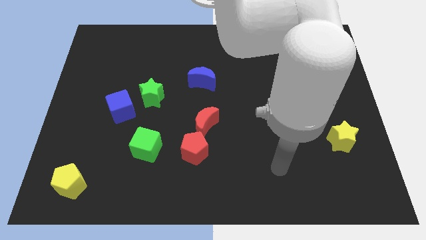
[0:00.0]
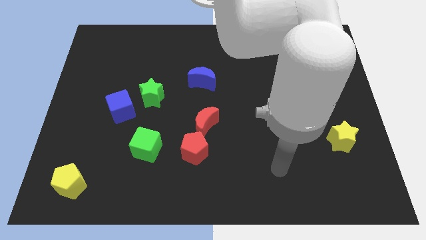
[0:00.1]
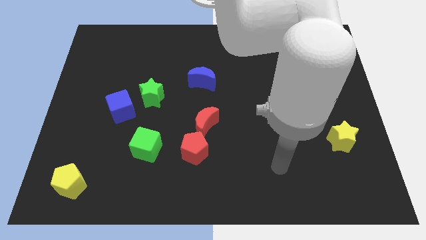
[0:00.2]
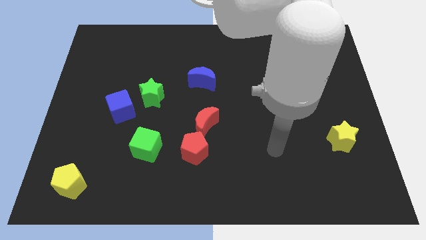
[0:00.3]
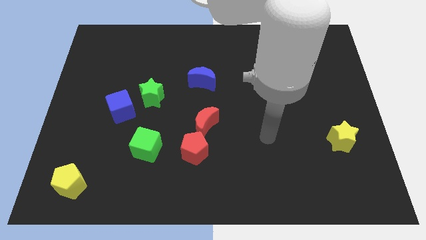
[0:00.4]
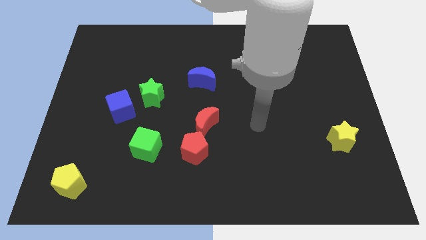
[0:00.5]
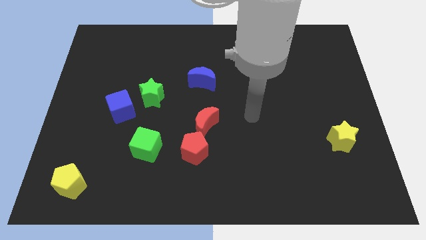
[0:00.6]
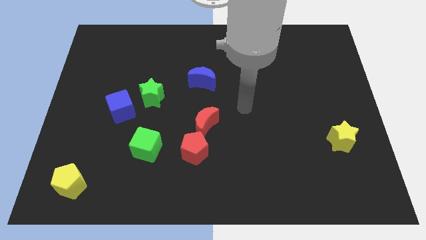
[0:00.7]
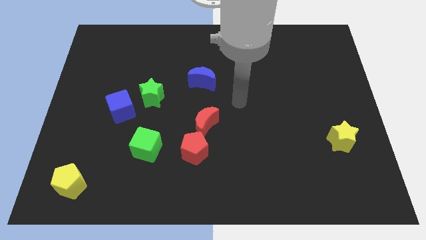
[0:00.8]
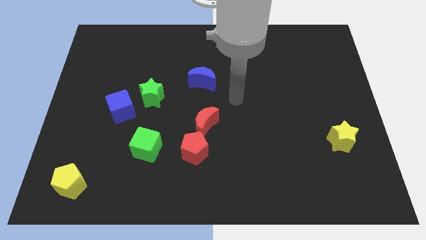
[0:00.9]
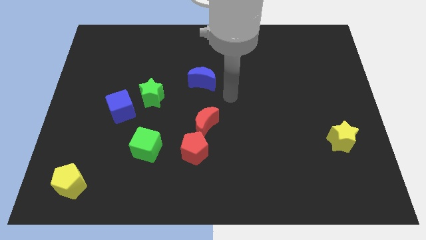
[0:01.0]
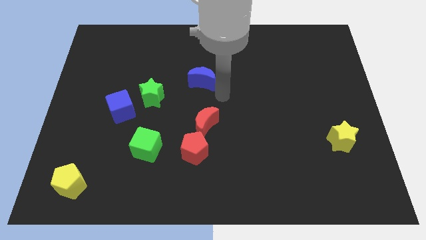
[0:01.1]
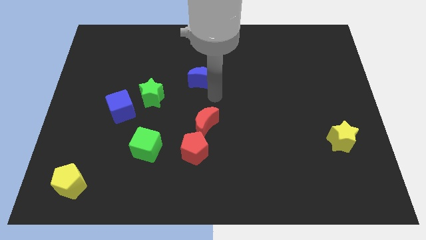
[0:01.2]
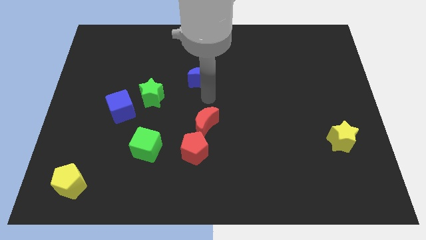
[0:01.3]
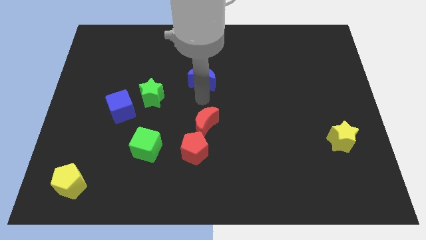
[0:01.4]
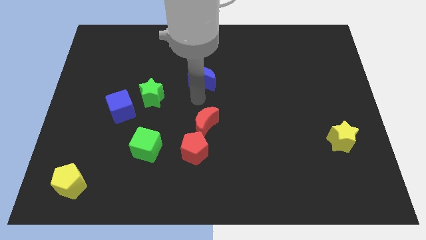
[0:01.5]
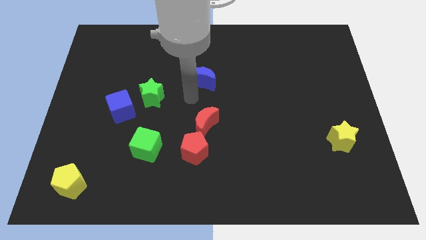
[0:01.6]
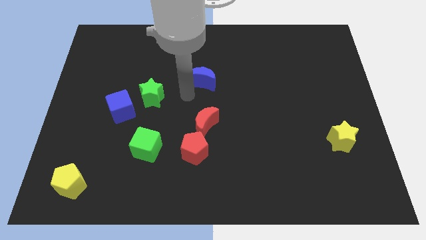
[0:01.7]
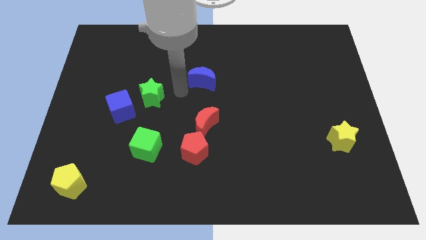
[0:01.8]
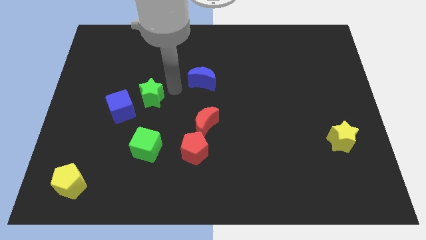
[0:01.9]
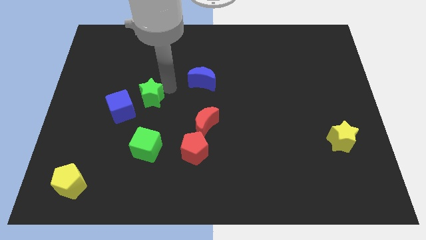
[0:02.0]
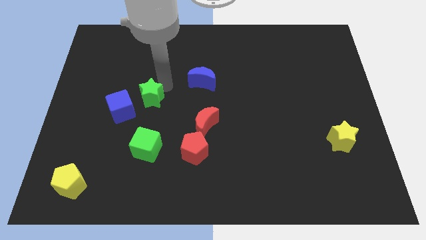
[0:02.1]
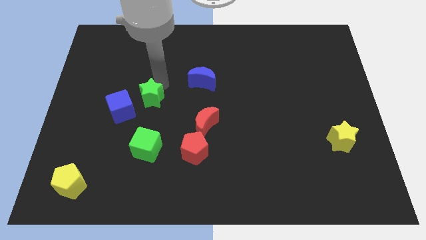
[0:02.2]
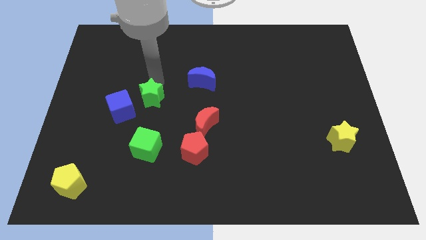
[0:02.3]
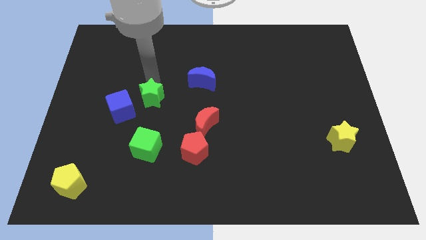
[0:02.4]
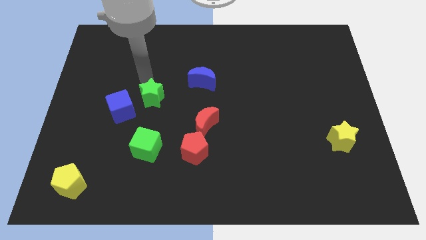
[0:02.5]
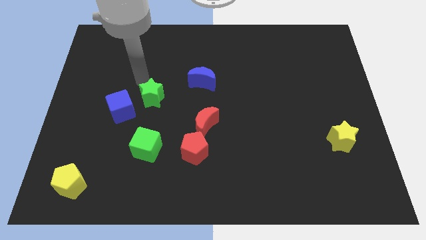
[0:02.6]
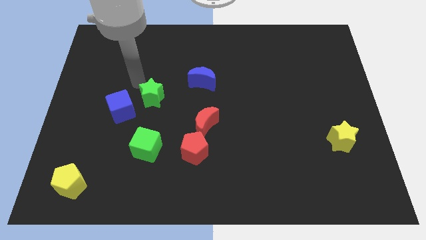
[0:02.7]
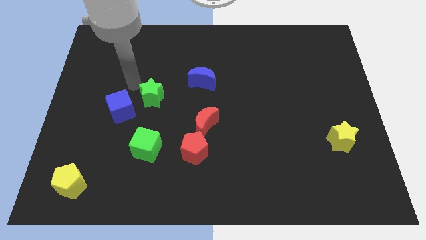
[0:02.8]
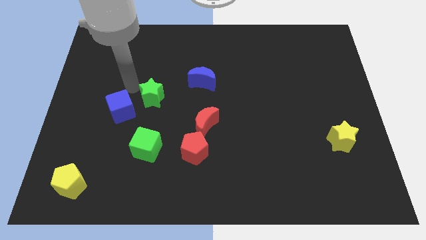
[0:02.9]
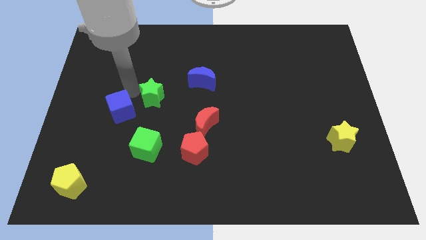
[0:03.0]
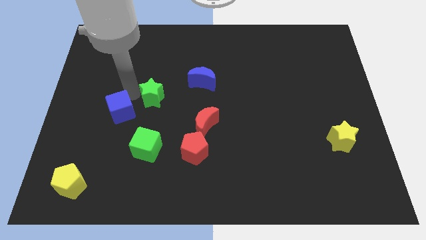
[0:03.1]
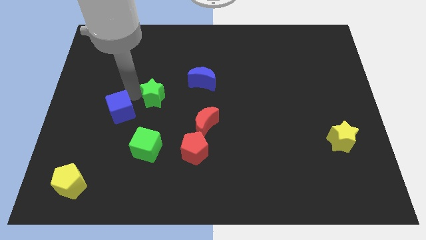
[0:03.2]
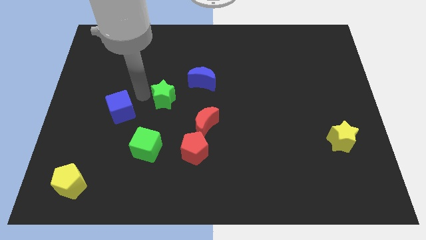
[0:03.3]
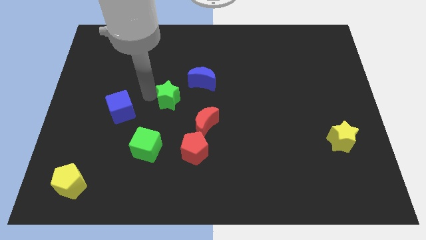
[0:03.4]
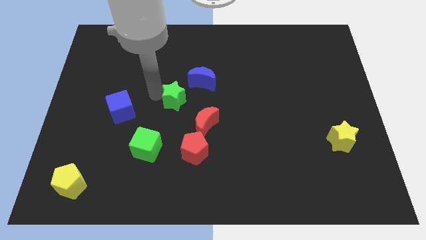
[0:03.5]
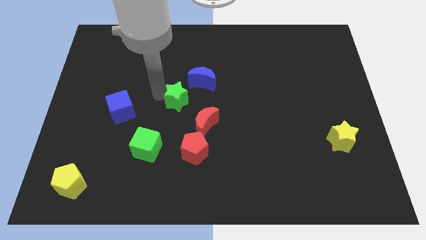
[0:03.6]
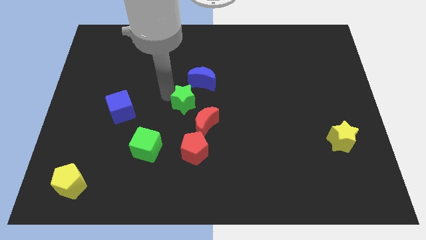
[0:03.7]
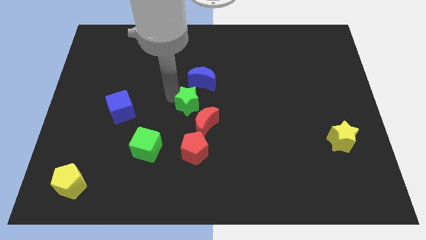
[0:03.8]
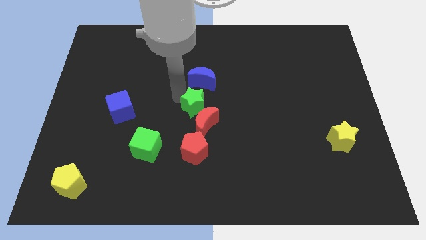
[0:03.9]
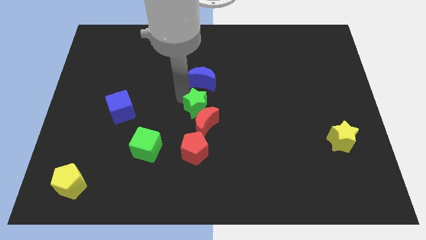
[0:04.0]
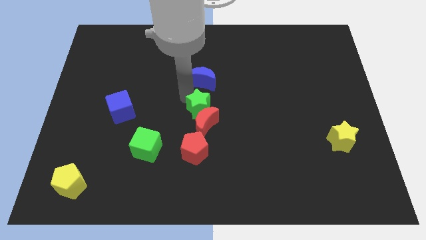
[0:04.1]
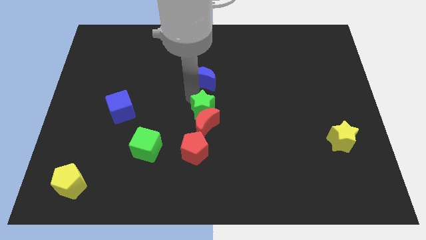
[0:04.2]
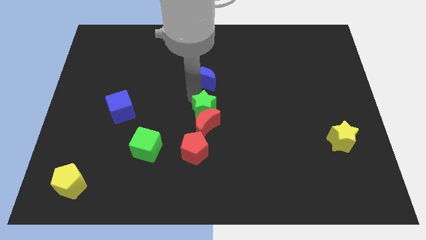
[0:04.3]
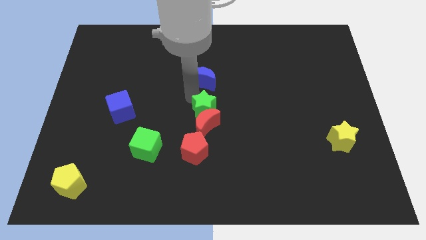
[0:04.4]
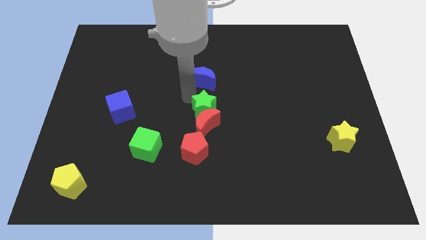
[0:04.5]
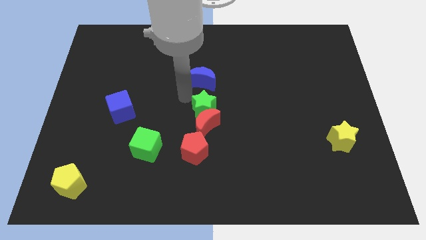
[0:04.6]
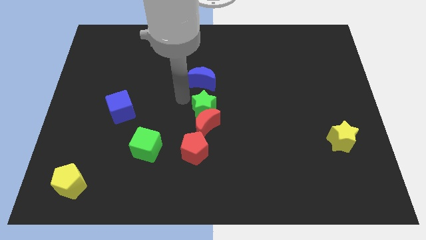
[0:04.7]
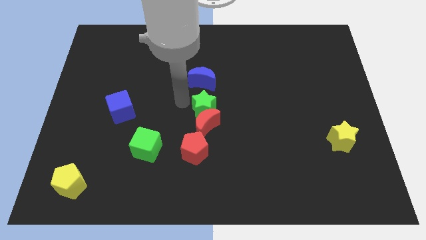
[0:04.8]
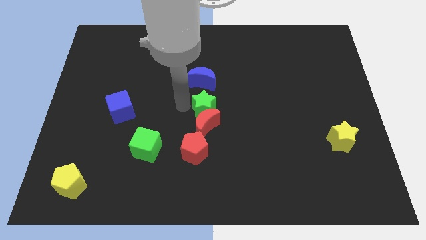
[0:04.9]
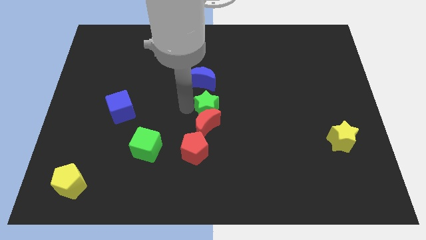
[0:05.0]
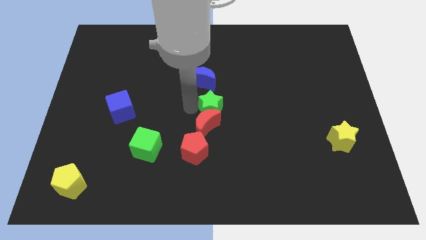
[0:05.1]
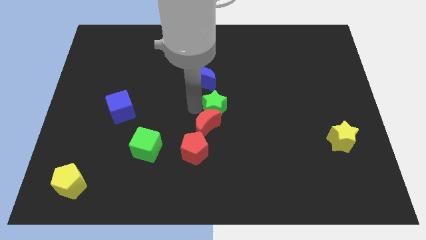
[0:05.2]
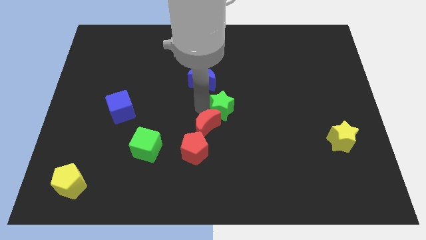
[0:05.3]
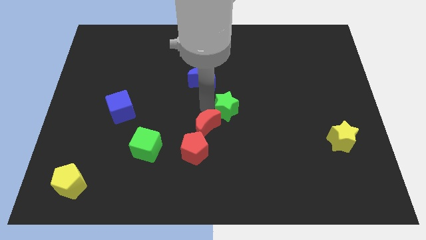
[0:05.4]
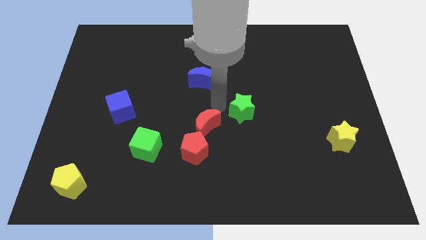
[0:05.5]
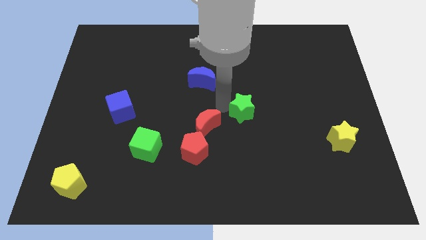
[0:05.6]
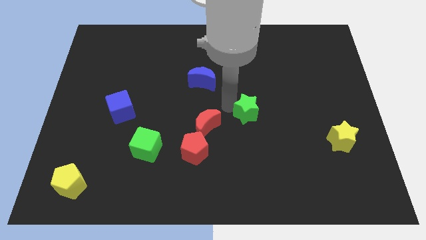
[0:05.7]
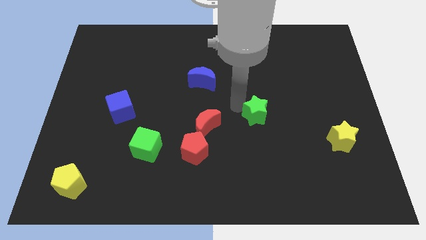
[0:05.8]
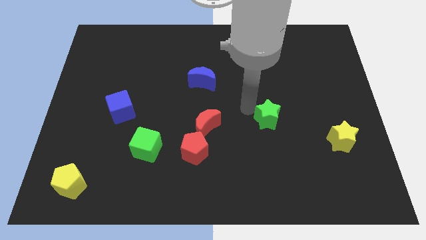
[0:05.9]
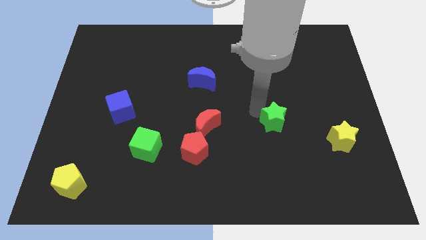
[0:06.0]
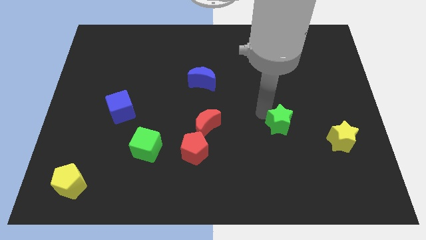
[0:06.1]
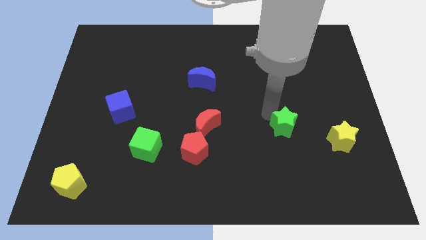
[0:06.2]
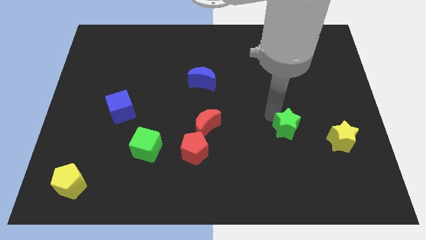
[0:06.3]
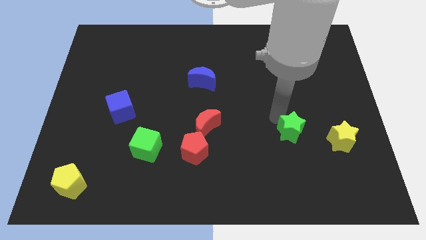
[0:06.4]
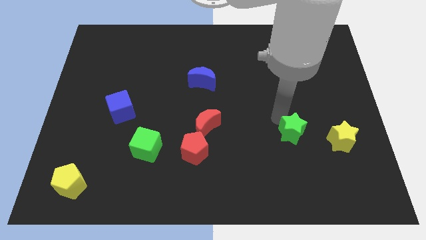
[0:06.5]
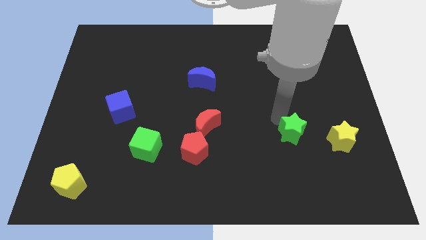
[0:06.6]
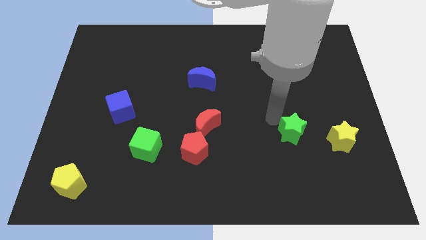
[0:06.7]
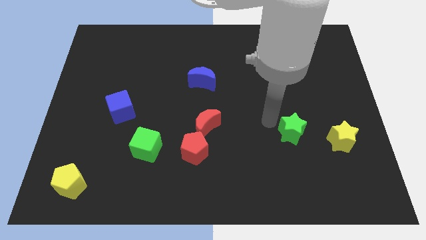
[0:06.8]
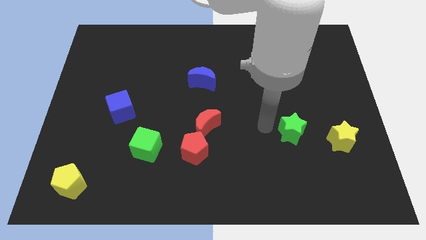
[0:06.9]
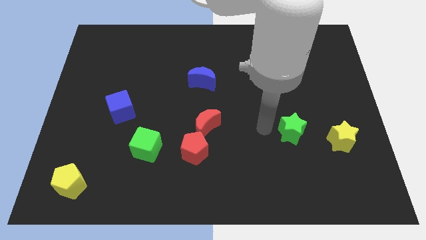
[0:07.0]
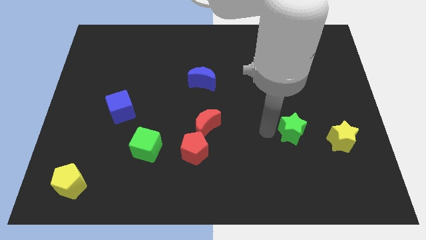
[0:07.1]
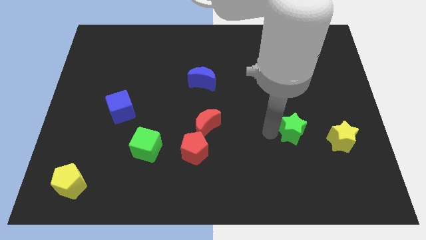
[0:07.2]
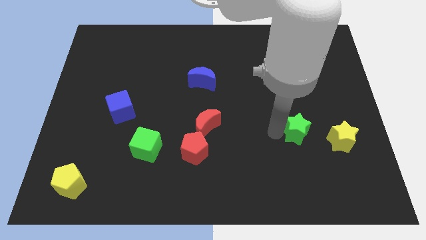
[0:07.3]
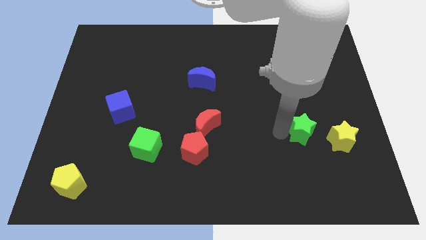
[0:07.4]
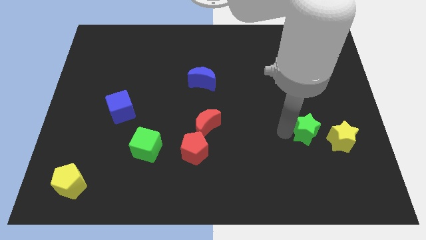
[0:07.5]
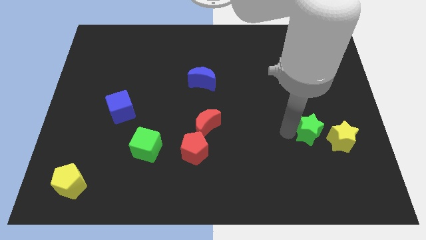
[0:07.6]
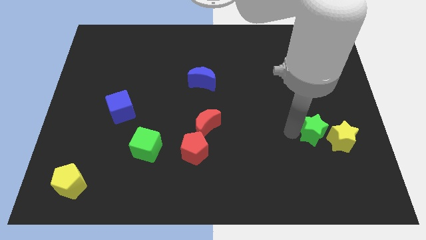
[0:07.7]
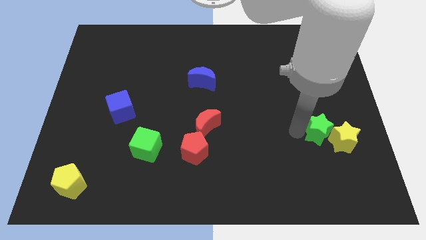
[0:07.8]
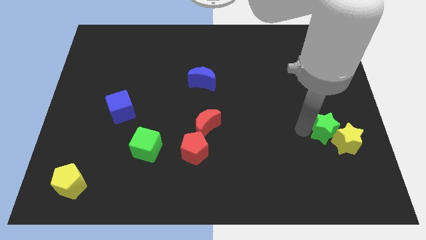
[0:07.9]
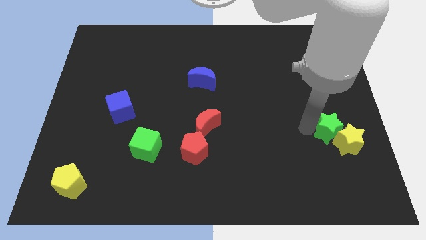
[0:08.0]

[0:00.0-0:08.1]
put the green star to the yellow star

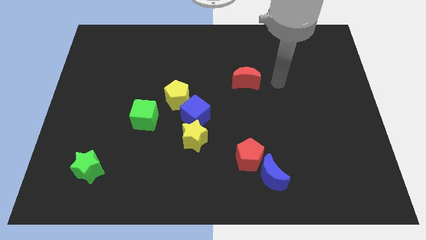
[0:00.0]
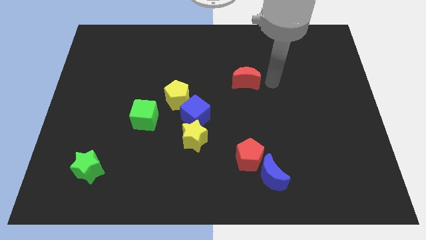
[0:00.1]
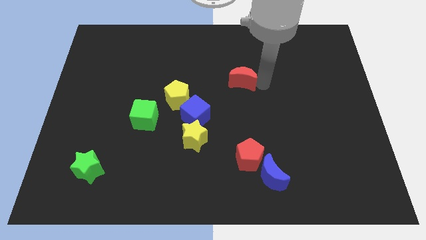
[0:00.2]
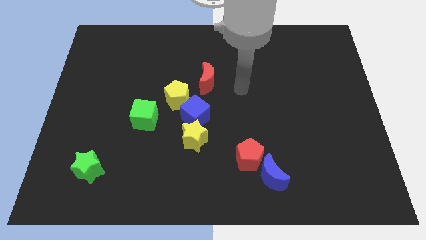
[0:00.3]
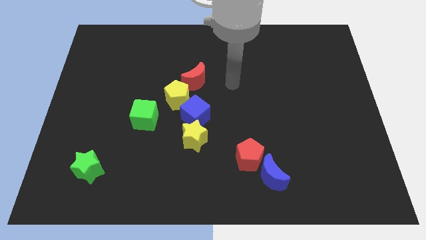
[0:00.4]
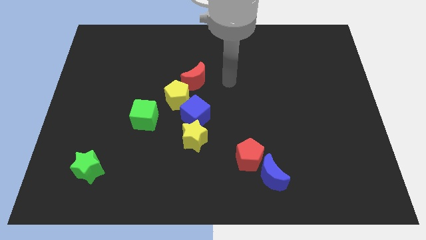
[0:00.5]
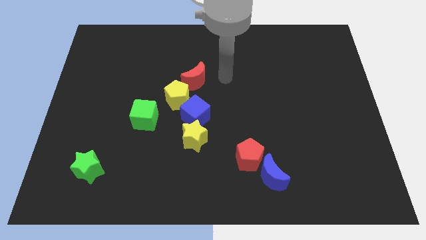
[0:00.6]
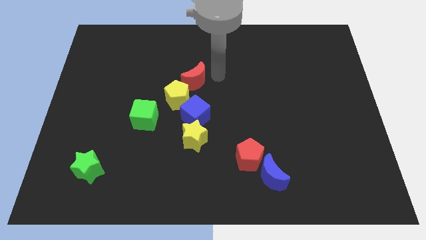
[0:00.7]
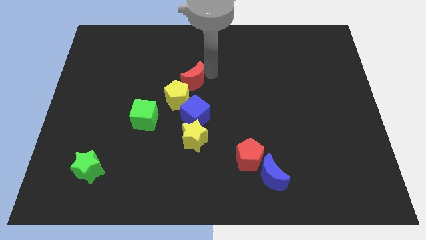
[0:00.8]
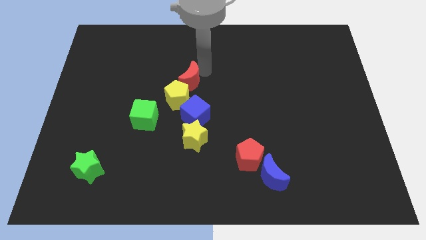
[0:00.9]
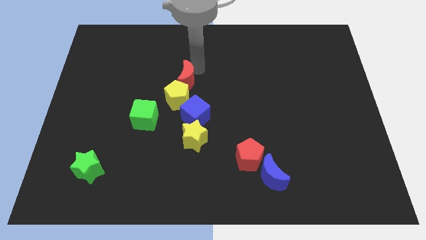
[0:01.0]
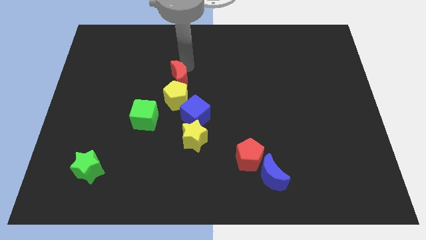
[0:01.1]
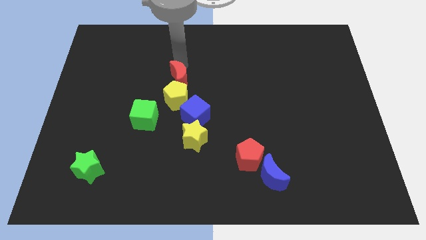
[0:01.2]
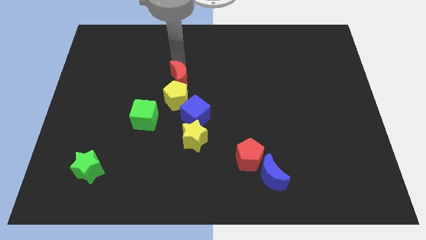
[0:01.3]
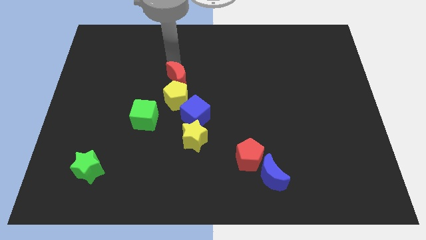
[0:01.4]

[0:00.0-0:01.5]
push the red moon towards the yellow pentagon
